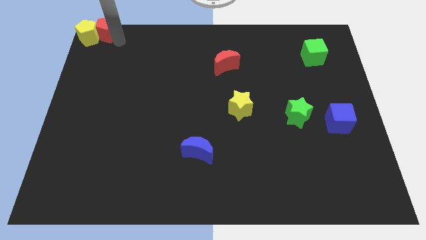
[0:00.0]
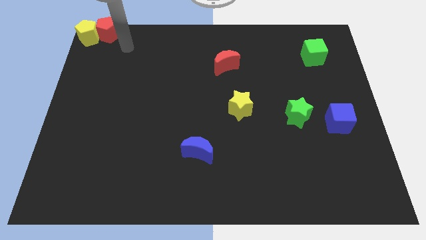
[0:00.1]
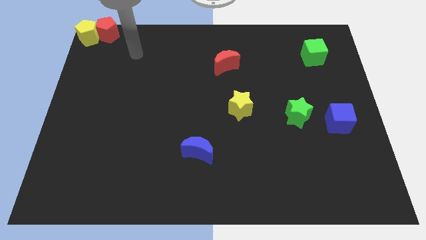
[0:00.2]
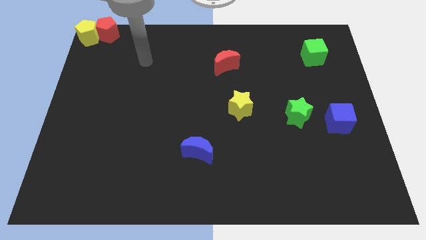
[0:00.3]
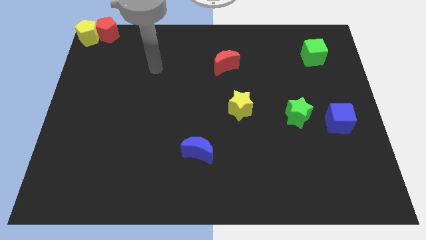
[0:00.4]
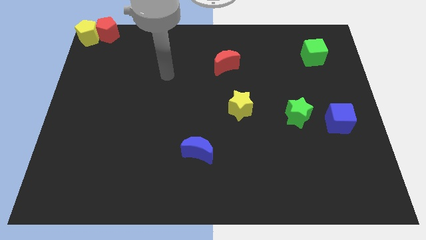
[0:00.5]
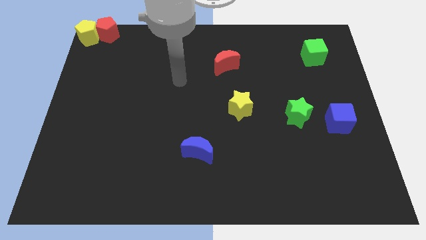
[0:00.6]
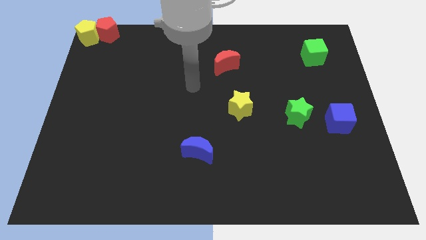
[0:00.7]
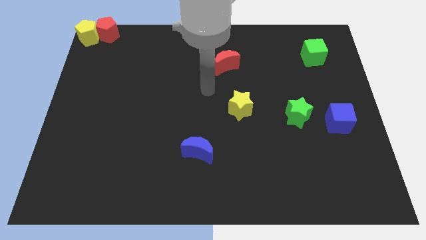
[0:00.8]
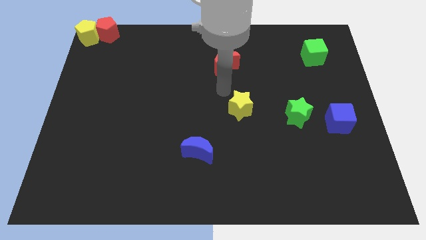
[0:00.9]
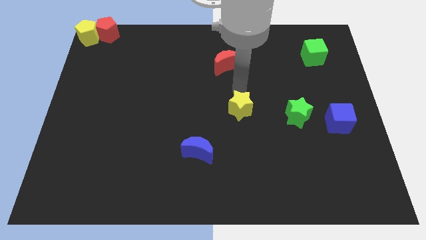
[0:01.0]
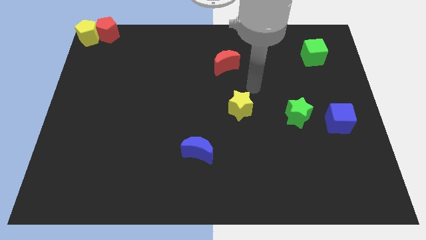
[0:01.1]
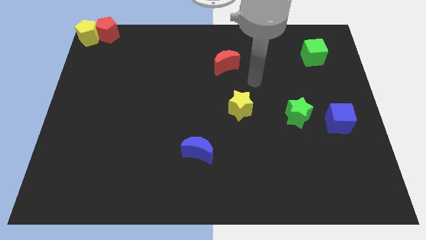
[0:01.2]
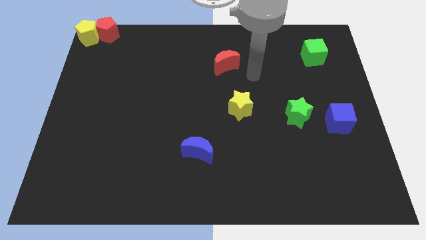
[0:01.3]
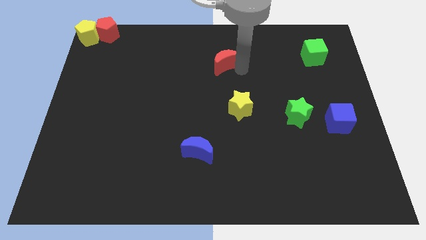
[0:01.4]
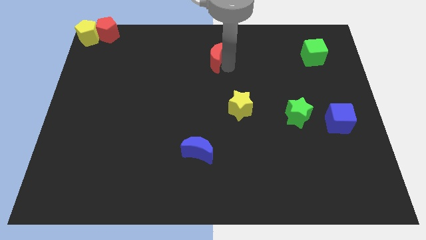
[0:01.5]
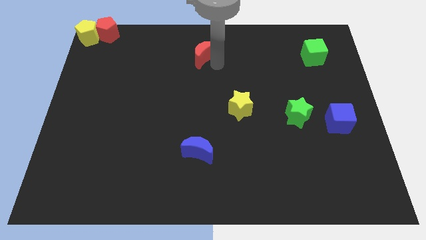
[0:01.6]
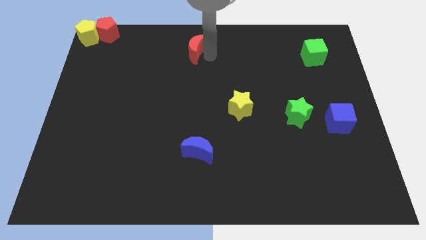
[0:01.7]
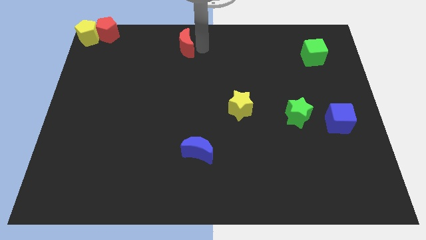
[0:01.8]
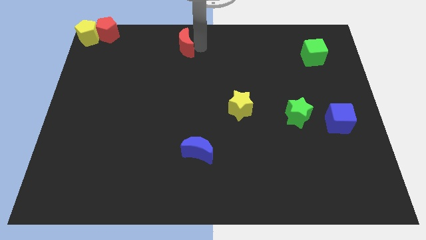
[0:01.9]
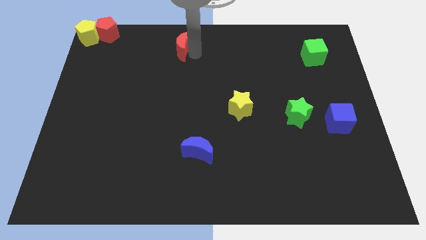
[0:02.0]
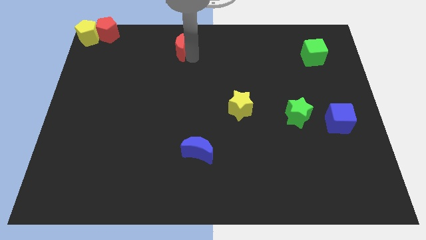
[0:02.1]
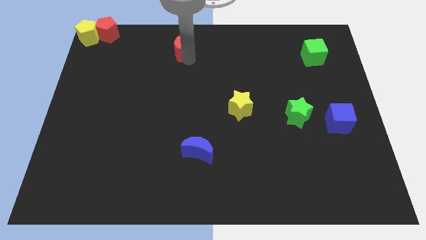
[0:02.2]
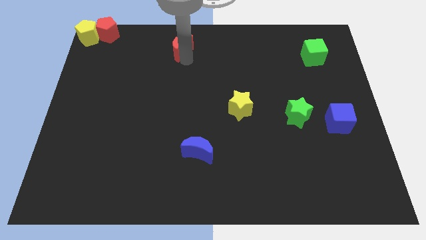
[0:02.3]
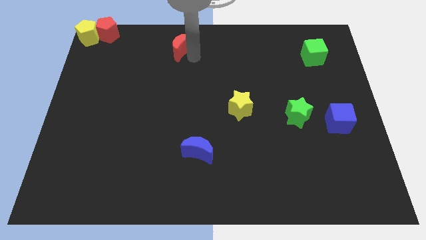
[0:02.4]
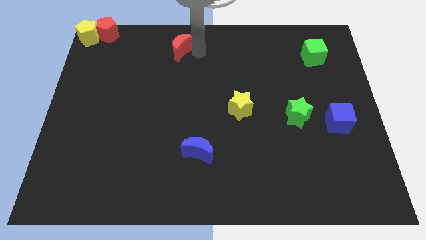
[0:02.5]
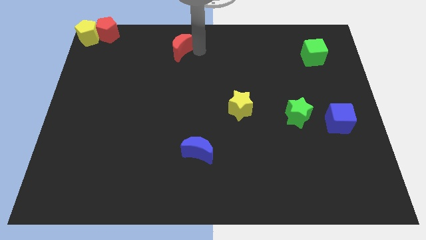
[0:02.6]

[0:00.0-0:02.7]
move the red crescent to the top left of the yellow star

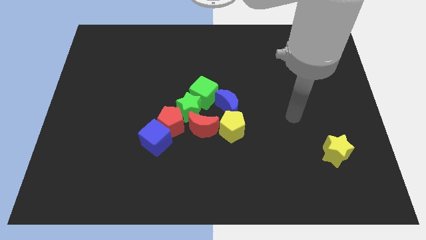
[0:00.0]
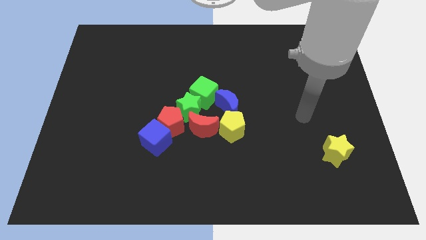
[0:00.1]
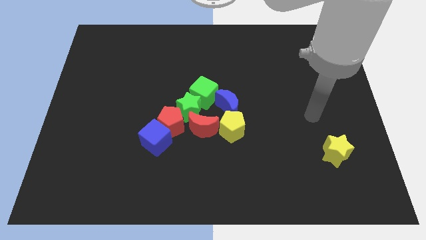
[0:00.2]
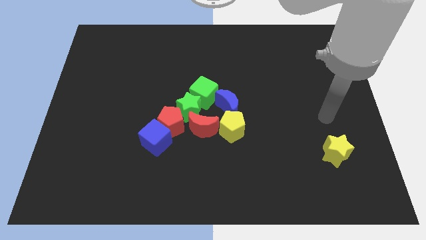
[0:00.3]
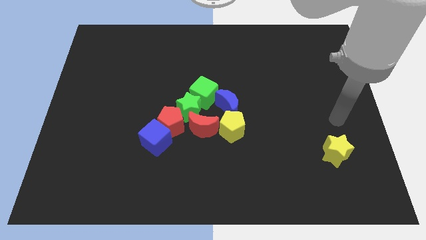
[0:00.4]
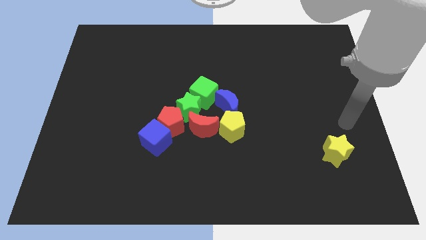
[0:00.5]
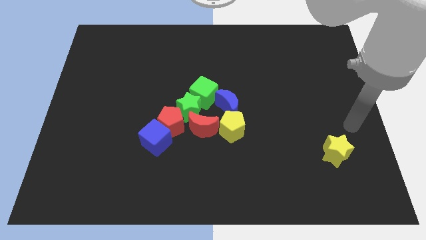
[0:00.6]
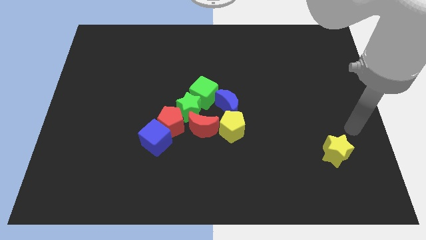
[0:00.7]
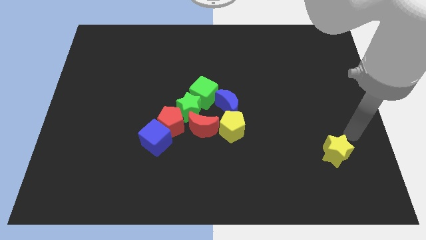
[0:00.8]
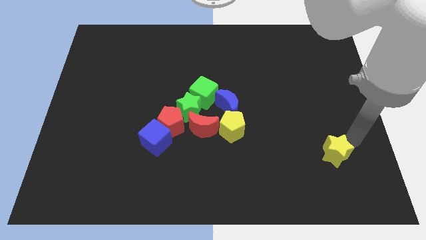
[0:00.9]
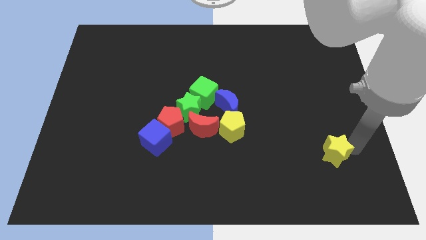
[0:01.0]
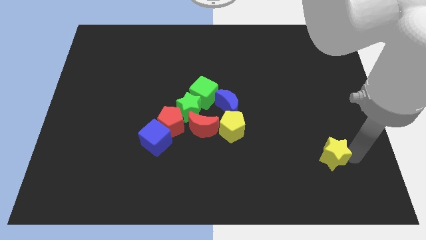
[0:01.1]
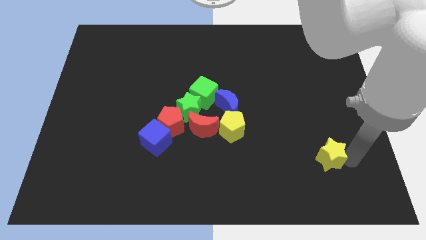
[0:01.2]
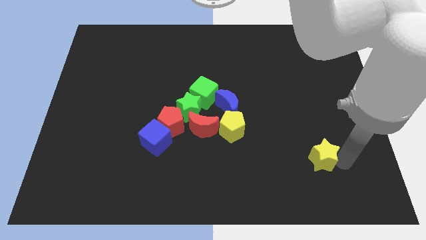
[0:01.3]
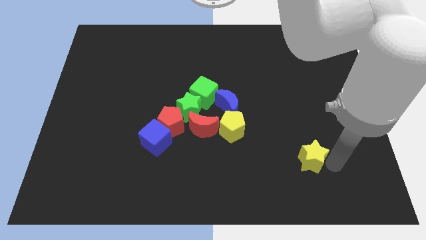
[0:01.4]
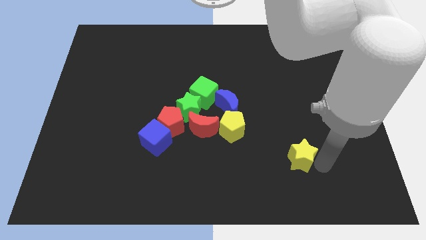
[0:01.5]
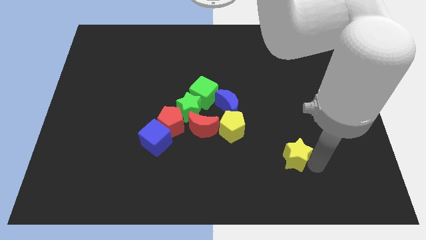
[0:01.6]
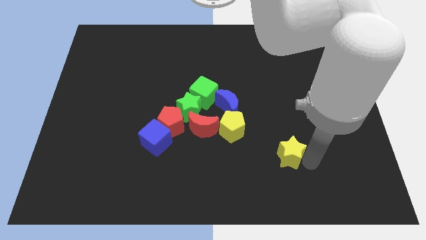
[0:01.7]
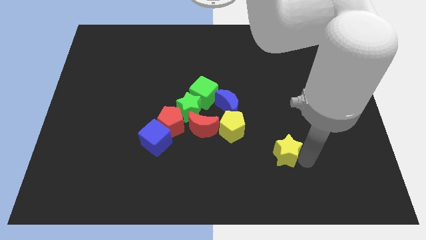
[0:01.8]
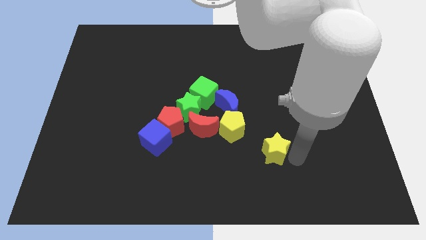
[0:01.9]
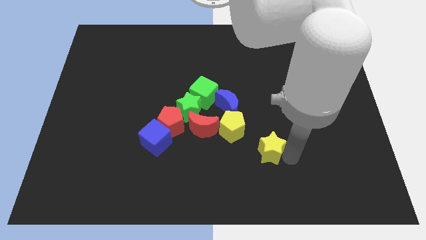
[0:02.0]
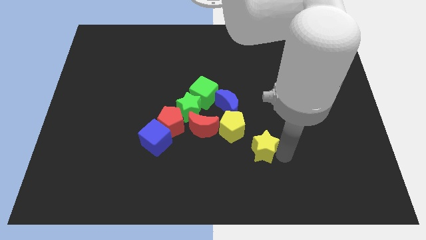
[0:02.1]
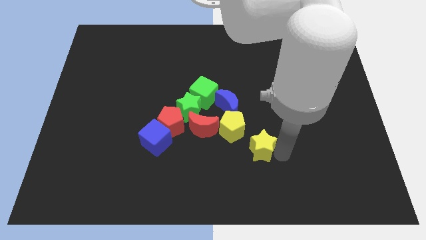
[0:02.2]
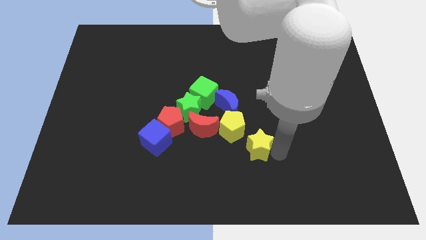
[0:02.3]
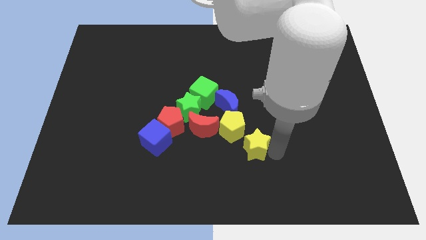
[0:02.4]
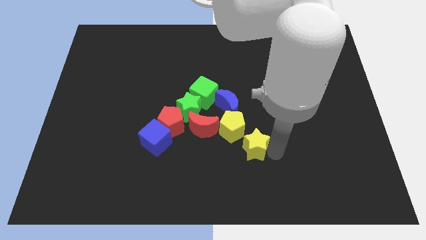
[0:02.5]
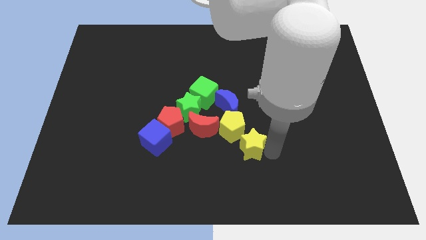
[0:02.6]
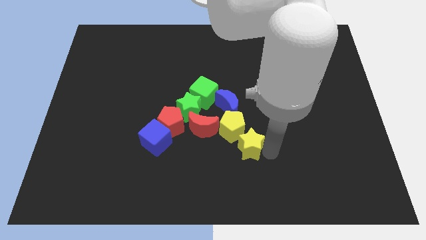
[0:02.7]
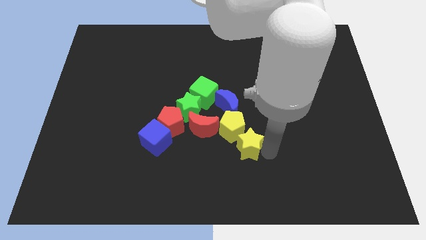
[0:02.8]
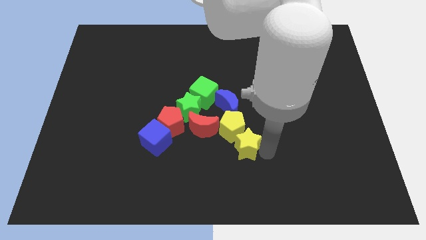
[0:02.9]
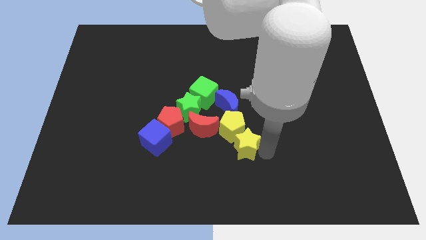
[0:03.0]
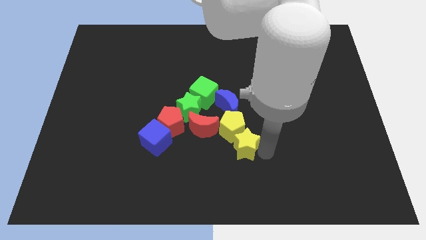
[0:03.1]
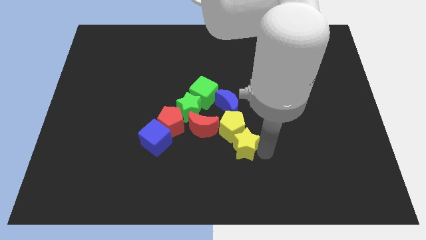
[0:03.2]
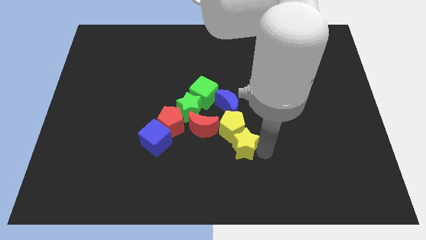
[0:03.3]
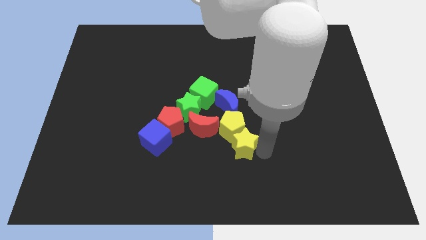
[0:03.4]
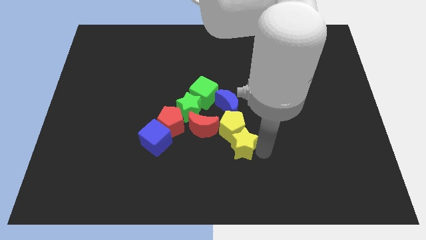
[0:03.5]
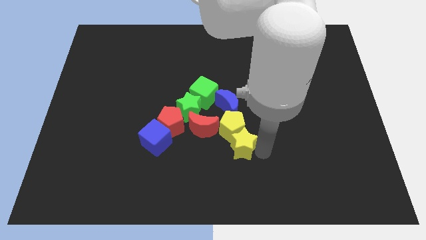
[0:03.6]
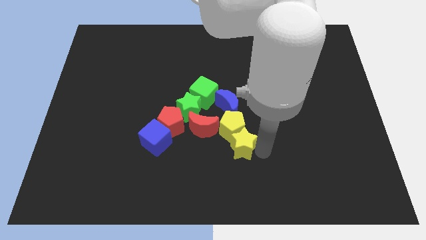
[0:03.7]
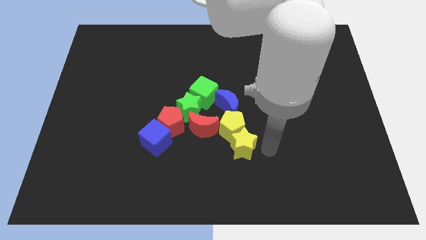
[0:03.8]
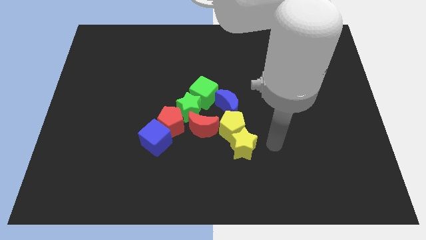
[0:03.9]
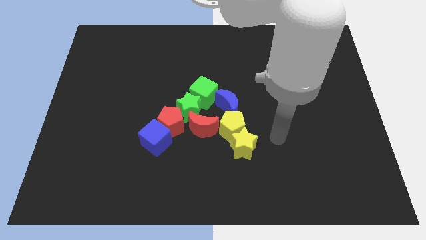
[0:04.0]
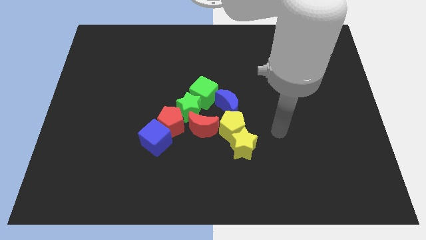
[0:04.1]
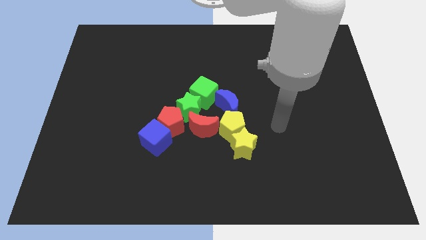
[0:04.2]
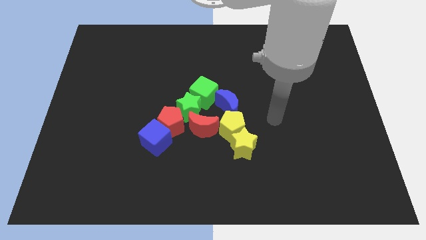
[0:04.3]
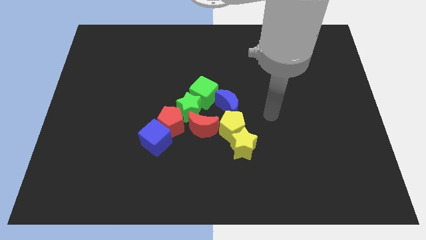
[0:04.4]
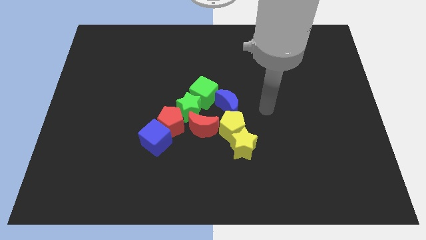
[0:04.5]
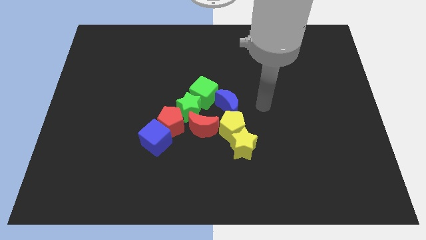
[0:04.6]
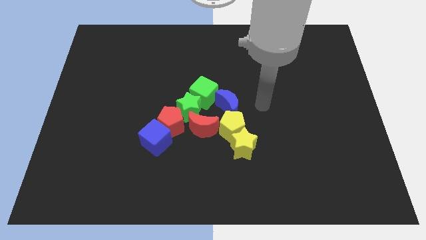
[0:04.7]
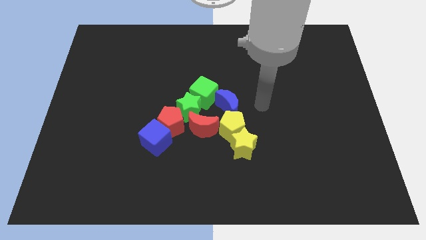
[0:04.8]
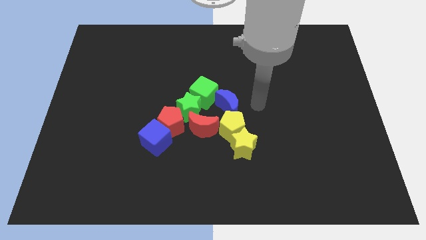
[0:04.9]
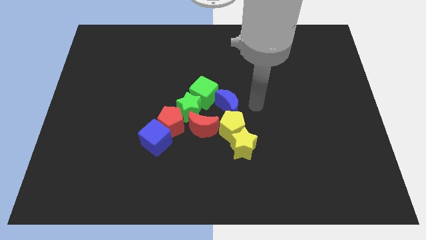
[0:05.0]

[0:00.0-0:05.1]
push the yellow star bottom right to the yellow pentagon

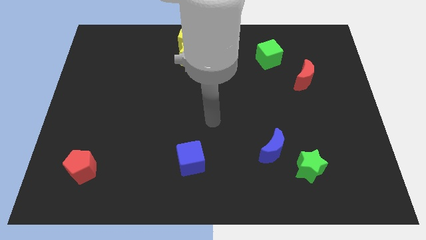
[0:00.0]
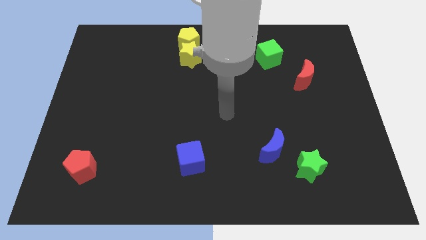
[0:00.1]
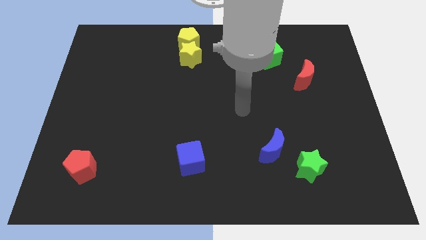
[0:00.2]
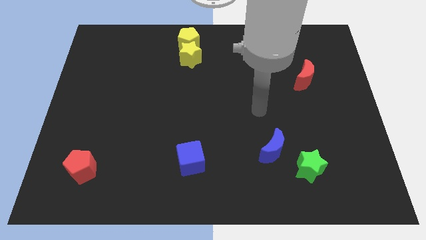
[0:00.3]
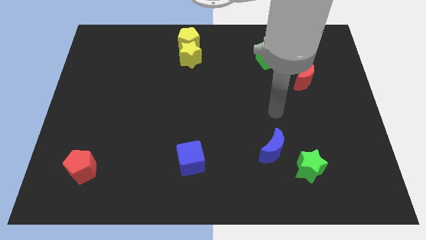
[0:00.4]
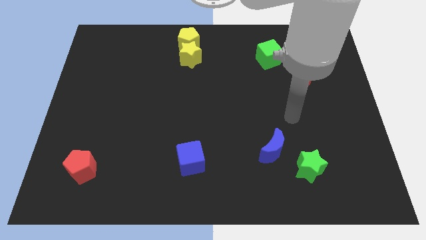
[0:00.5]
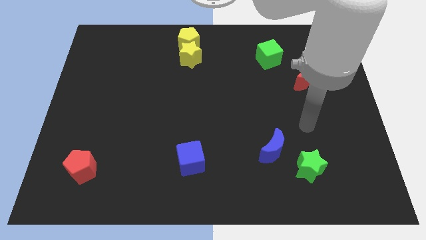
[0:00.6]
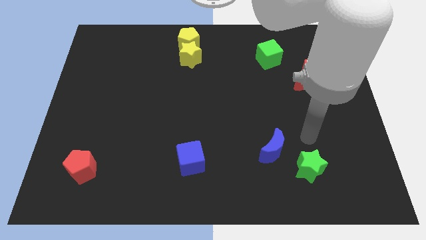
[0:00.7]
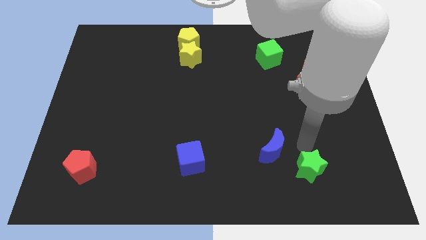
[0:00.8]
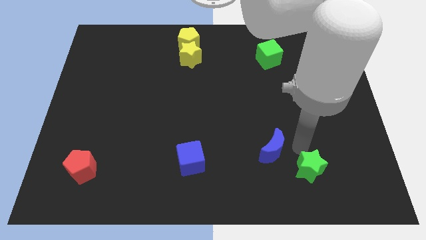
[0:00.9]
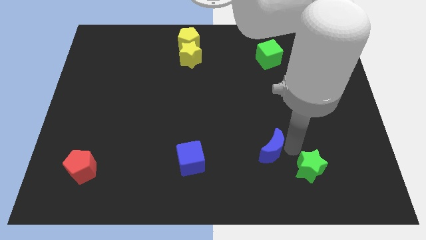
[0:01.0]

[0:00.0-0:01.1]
move your arm close to blue moon
